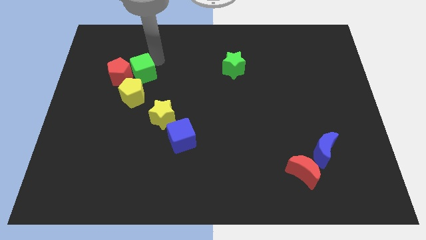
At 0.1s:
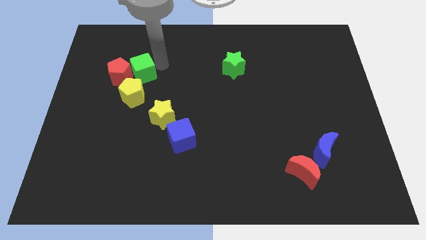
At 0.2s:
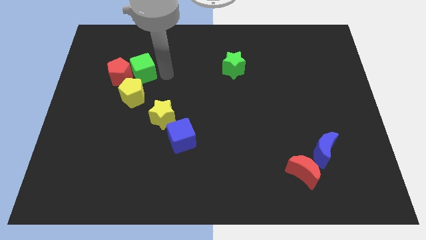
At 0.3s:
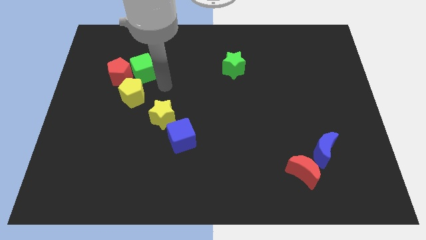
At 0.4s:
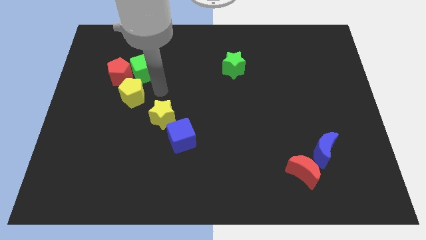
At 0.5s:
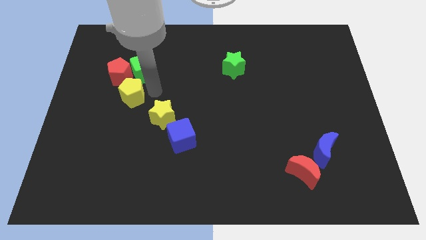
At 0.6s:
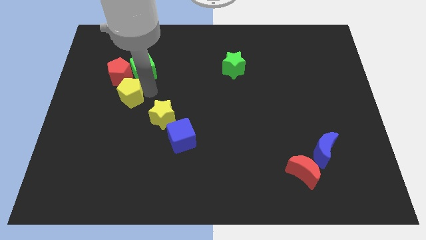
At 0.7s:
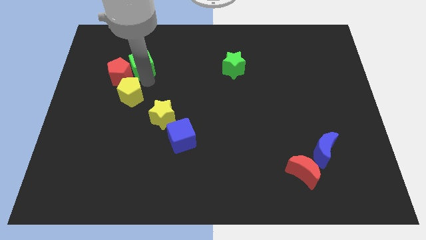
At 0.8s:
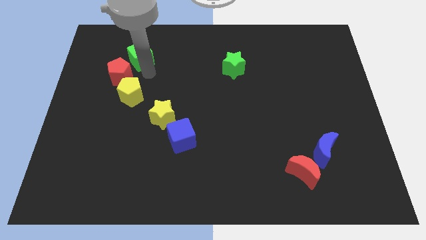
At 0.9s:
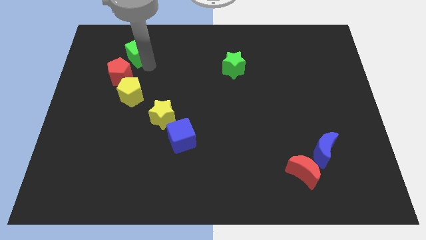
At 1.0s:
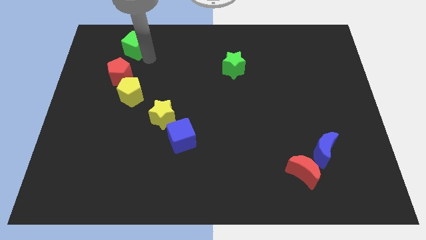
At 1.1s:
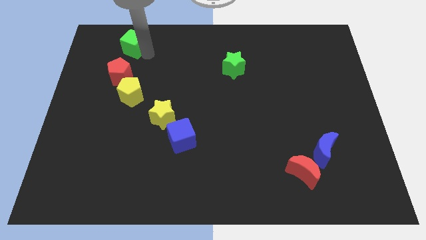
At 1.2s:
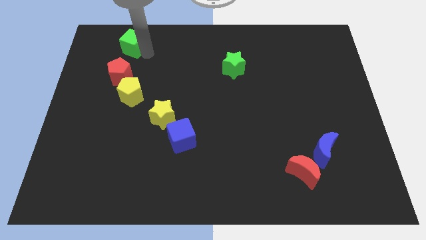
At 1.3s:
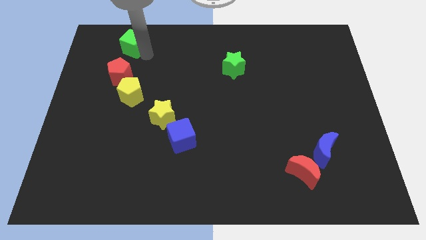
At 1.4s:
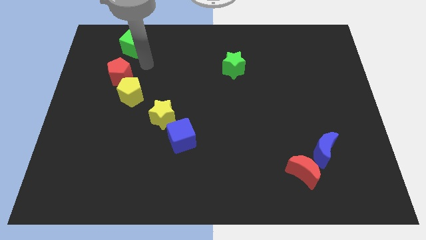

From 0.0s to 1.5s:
put the green cube at the top right of the red pentagon

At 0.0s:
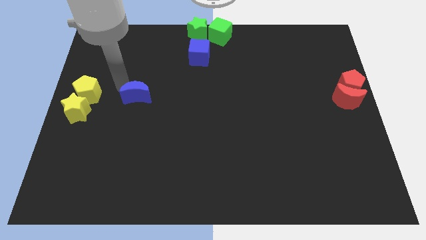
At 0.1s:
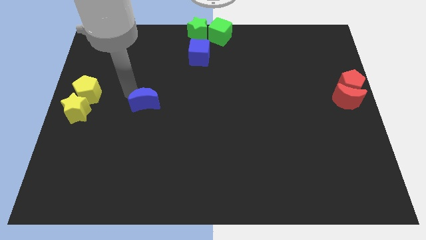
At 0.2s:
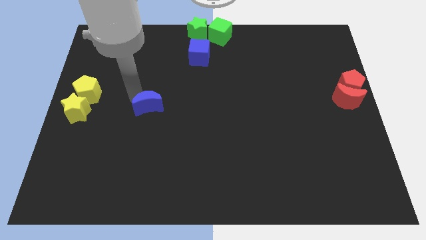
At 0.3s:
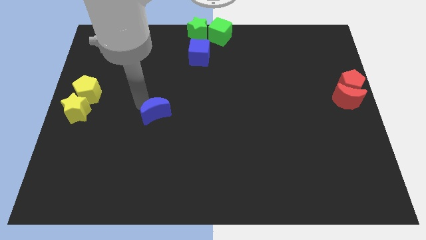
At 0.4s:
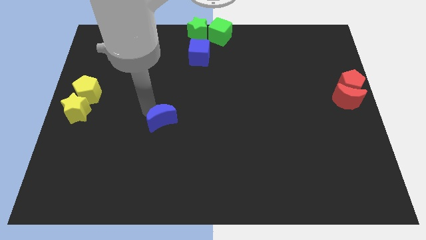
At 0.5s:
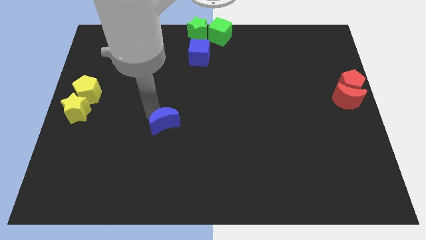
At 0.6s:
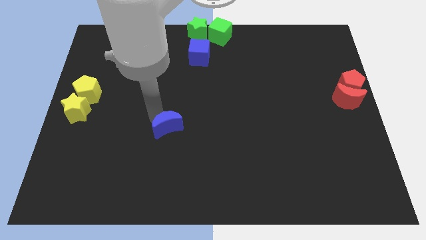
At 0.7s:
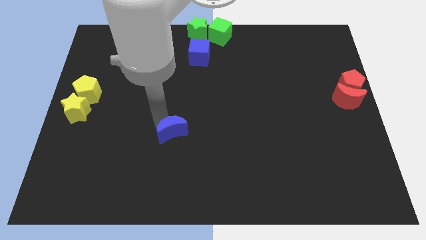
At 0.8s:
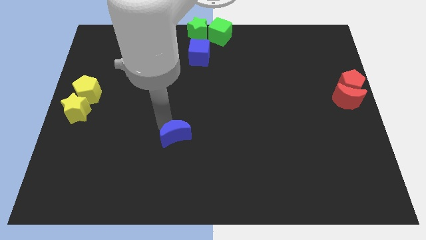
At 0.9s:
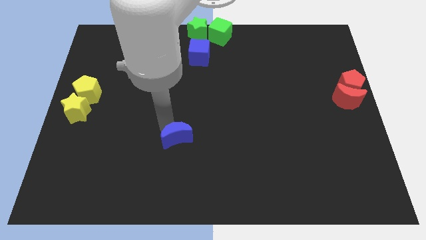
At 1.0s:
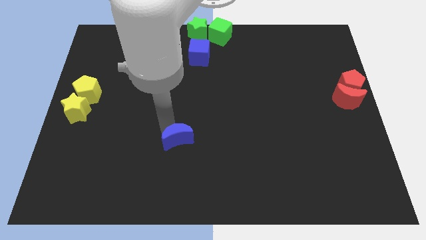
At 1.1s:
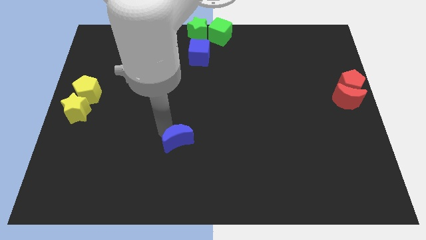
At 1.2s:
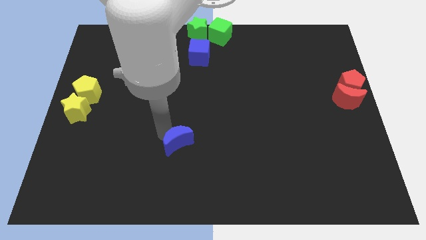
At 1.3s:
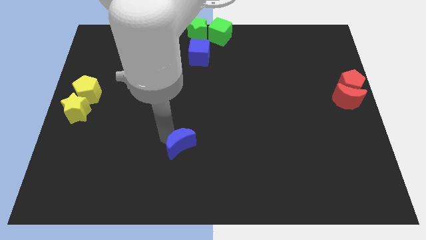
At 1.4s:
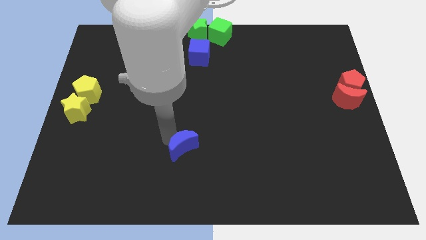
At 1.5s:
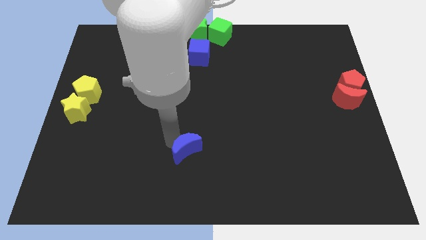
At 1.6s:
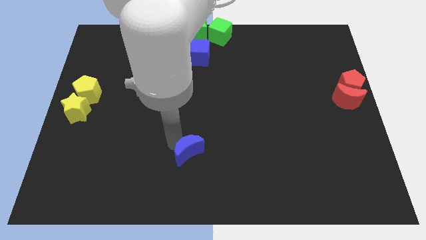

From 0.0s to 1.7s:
move the blue moon towards the bottom side of the board

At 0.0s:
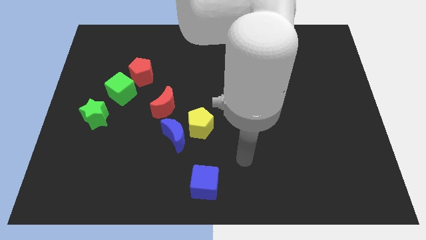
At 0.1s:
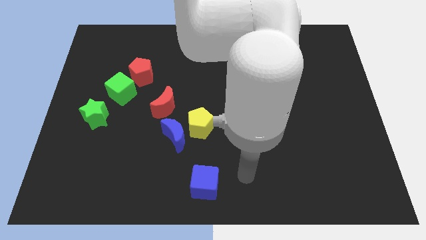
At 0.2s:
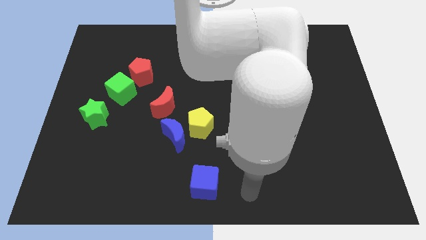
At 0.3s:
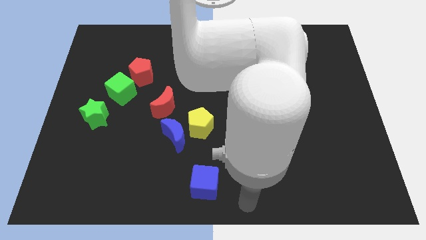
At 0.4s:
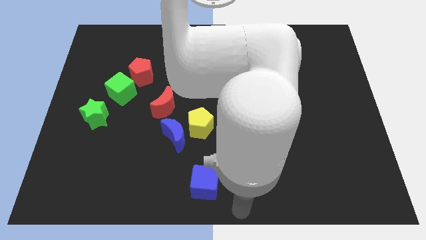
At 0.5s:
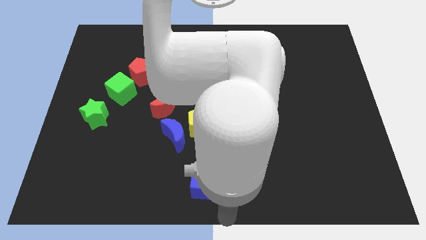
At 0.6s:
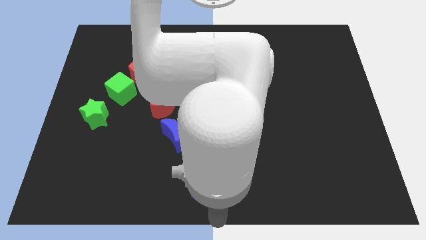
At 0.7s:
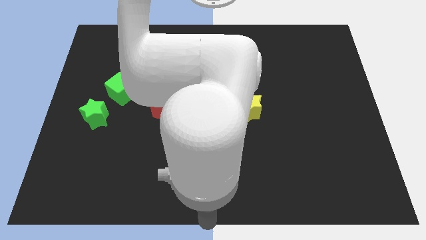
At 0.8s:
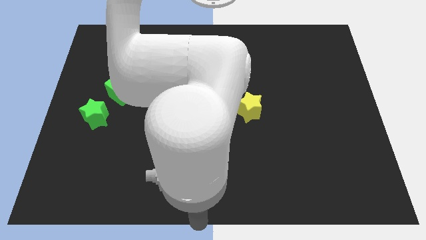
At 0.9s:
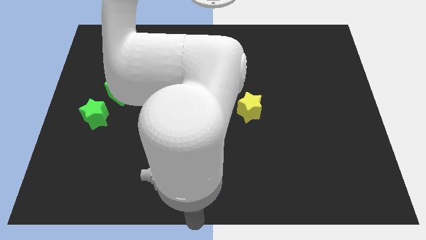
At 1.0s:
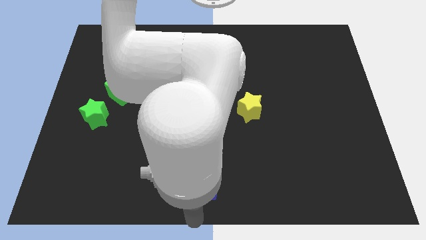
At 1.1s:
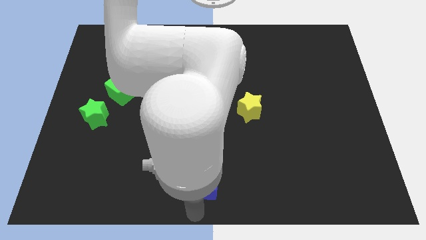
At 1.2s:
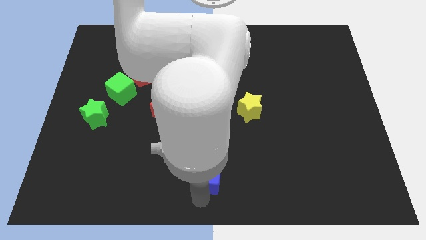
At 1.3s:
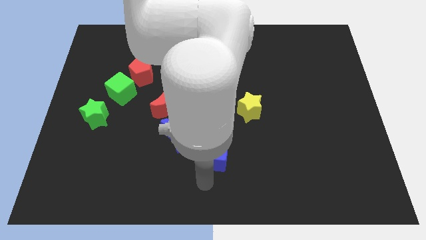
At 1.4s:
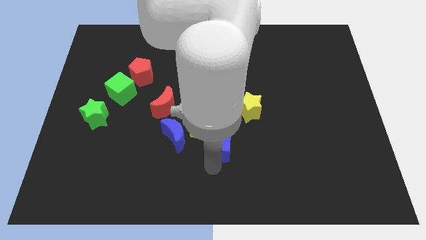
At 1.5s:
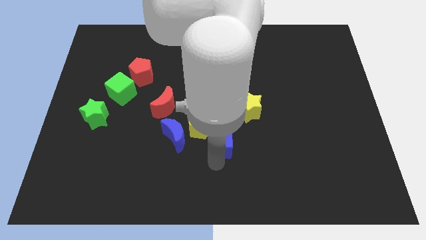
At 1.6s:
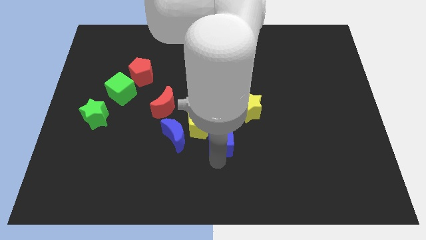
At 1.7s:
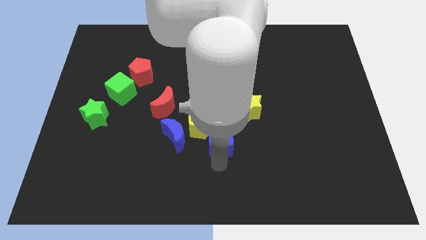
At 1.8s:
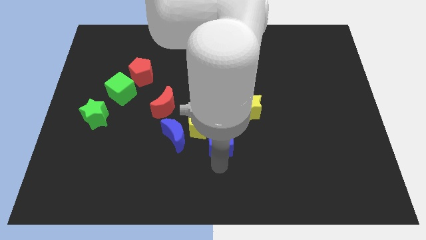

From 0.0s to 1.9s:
move the blue cube close to yellow pentagon

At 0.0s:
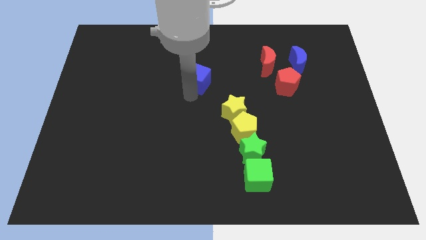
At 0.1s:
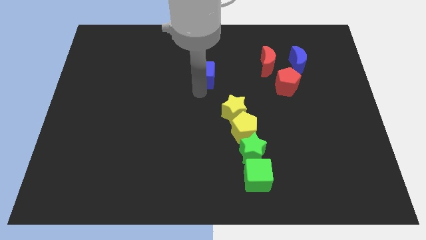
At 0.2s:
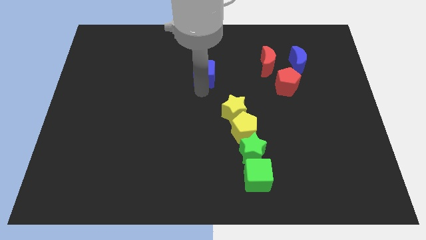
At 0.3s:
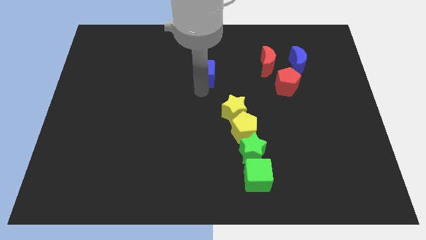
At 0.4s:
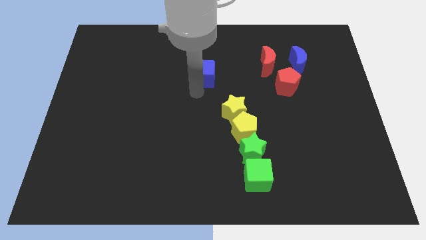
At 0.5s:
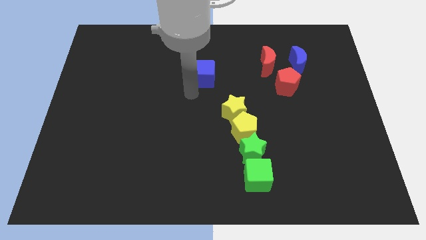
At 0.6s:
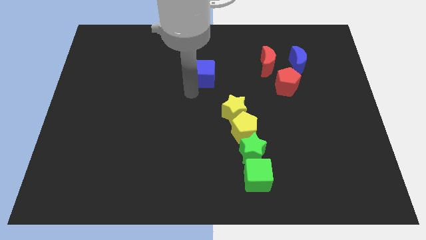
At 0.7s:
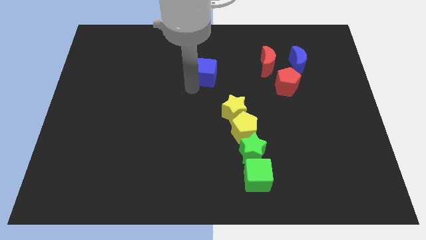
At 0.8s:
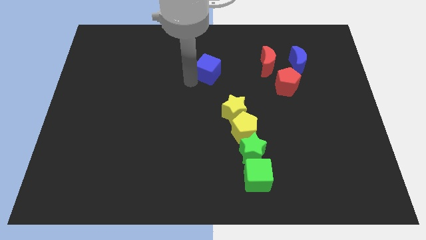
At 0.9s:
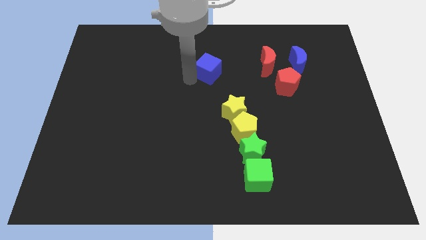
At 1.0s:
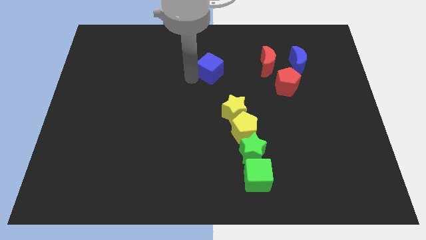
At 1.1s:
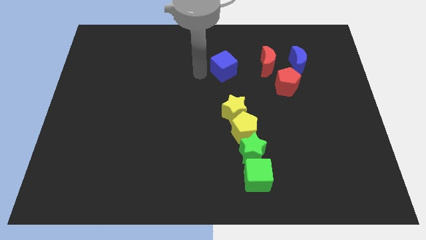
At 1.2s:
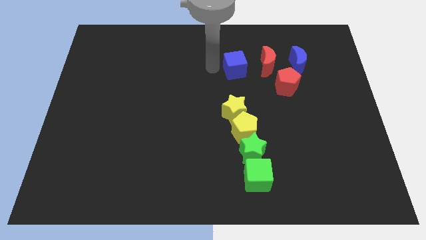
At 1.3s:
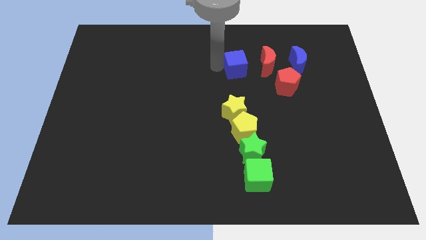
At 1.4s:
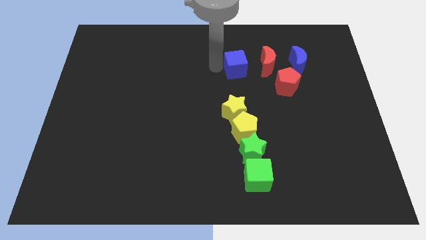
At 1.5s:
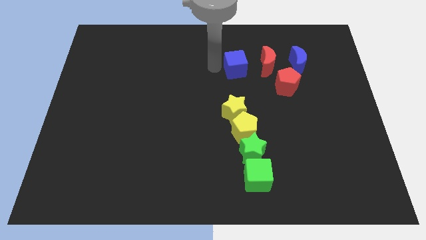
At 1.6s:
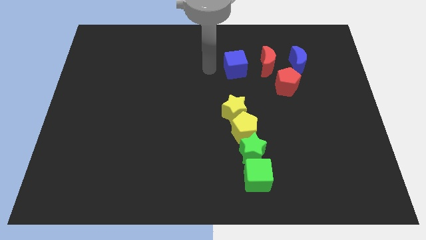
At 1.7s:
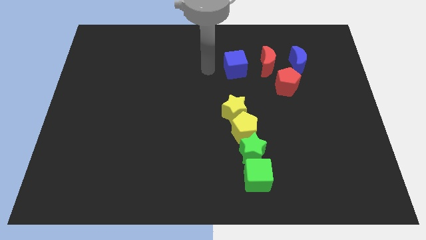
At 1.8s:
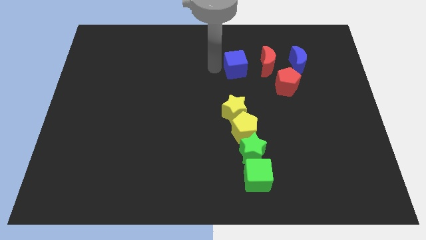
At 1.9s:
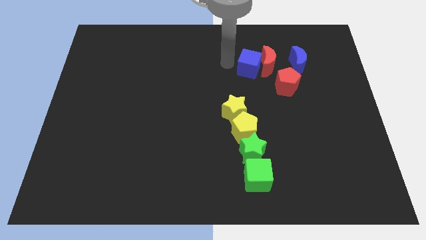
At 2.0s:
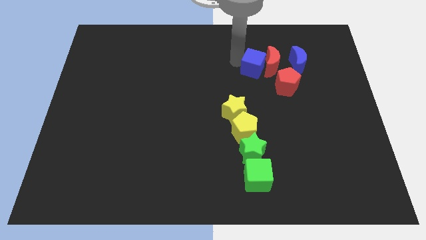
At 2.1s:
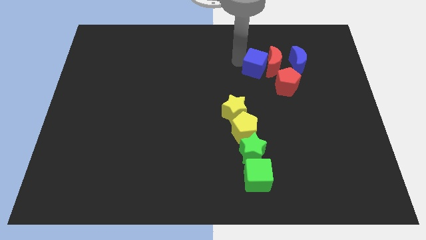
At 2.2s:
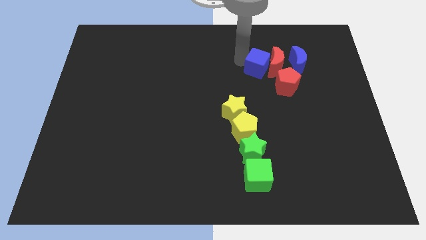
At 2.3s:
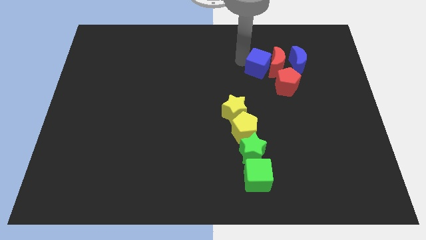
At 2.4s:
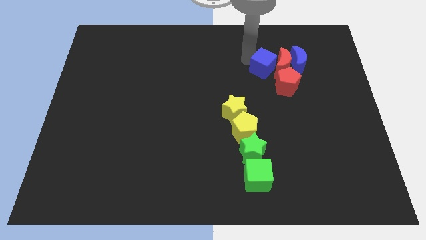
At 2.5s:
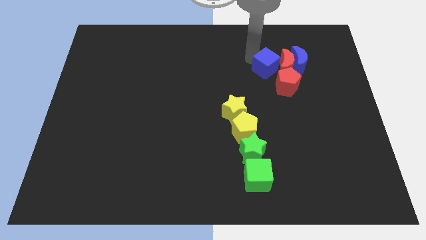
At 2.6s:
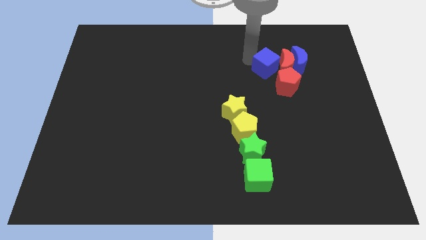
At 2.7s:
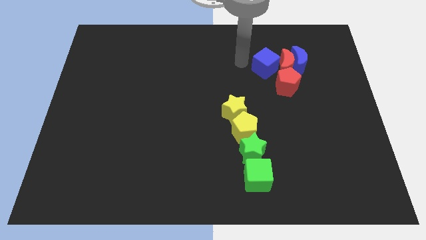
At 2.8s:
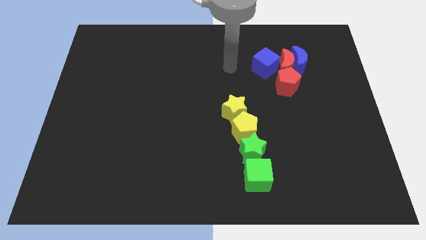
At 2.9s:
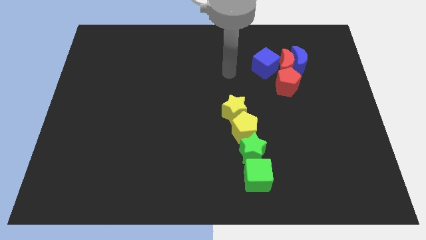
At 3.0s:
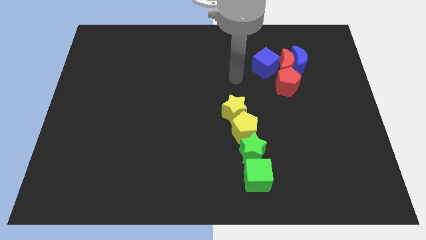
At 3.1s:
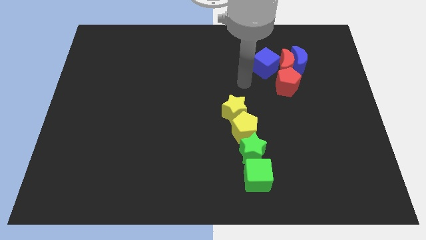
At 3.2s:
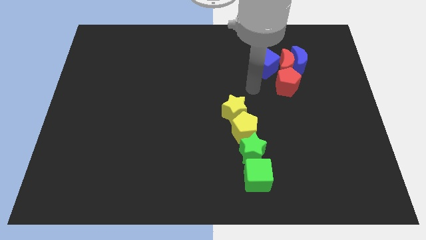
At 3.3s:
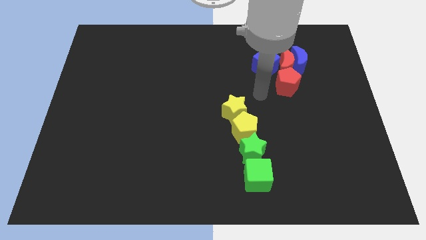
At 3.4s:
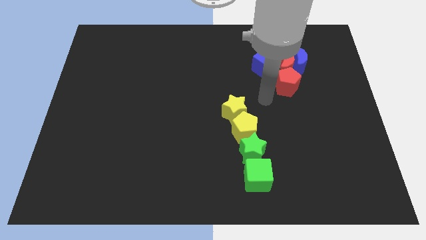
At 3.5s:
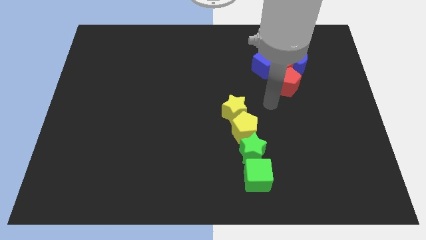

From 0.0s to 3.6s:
move the blue cube close to red moon

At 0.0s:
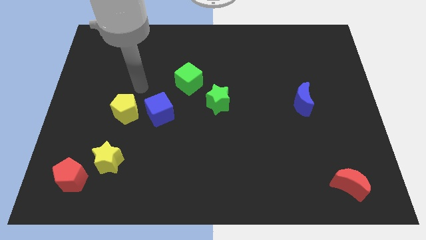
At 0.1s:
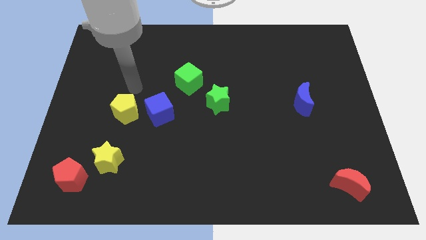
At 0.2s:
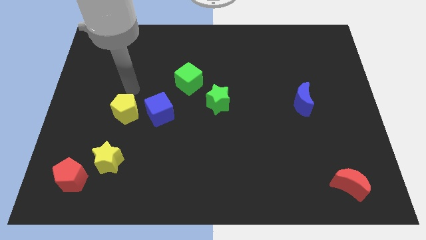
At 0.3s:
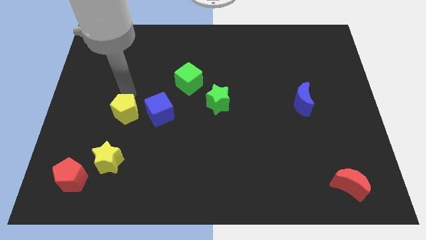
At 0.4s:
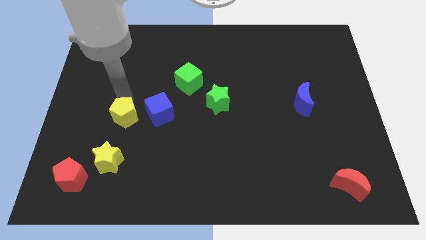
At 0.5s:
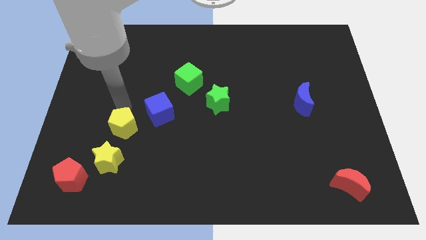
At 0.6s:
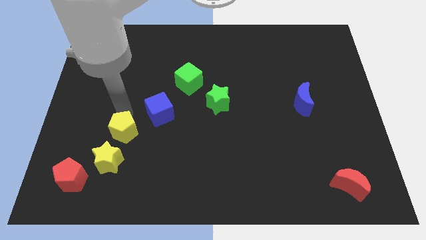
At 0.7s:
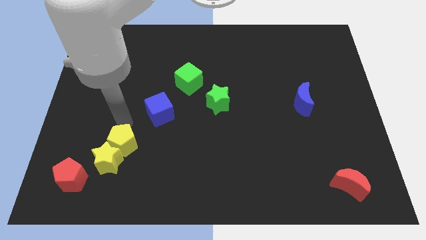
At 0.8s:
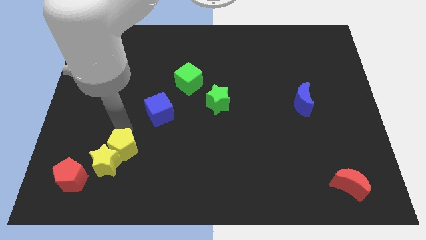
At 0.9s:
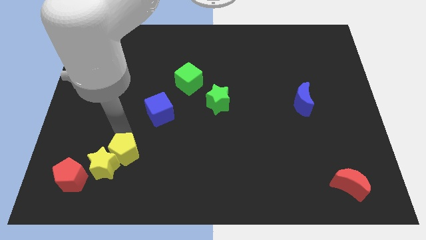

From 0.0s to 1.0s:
push the yellow pentagon into the yellow star diagonally
